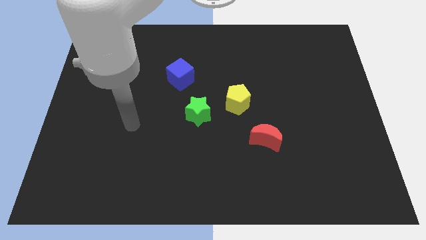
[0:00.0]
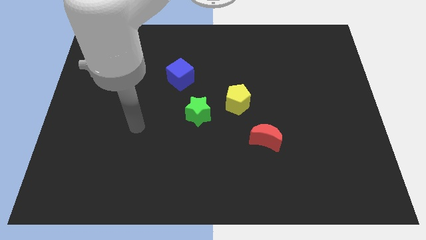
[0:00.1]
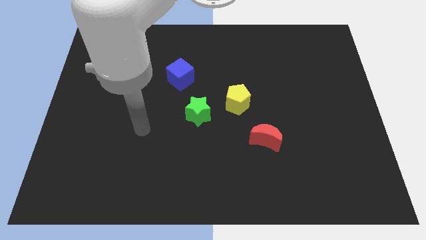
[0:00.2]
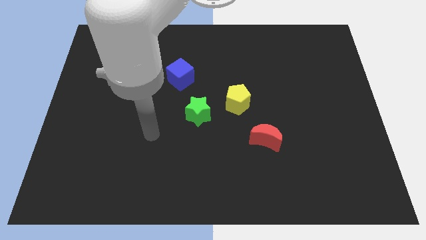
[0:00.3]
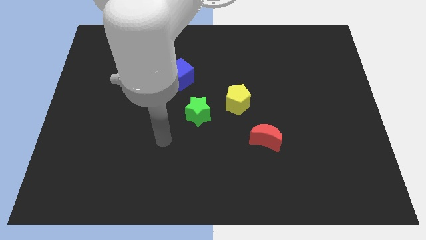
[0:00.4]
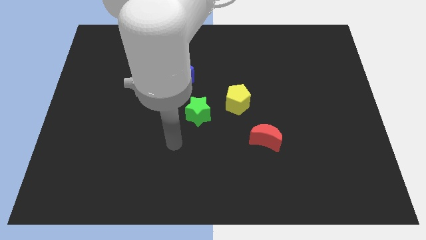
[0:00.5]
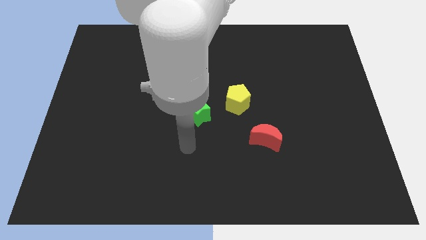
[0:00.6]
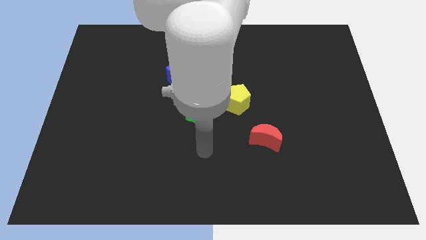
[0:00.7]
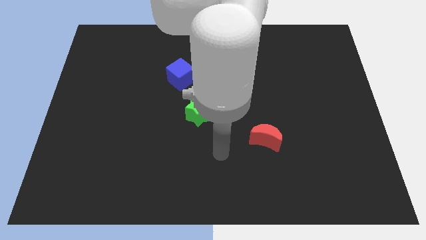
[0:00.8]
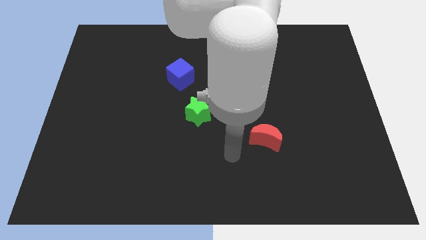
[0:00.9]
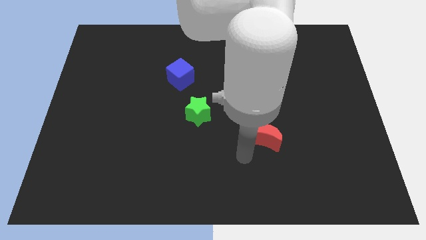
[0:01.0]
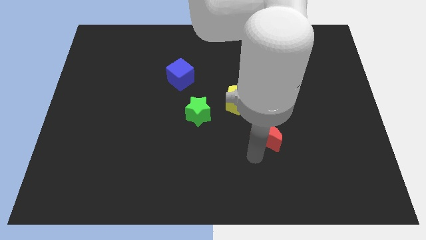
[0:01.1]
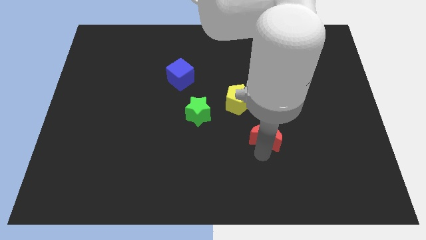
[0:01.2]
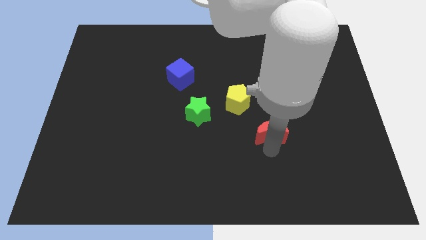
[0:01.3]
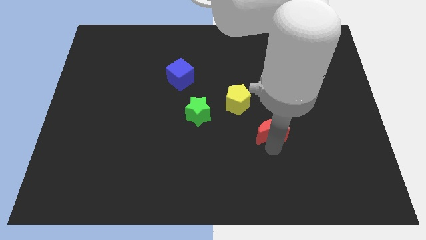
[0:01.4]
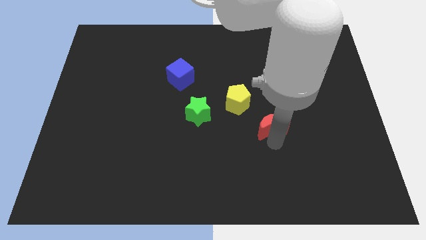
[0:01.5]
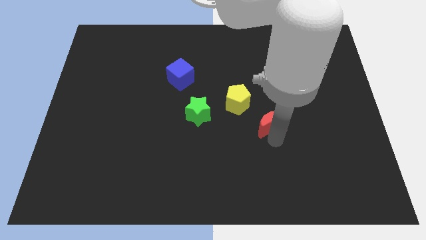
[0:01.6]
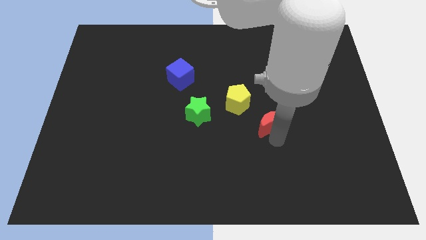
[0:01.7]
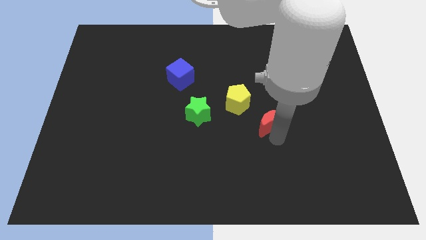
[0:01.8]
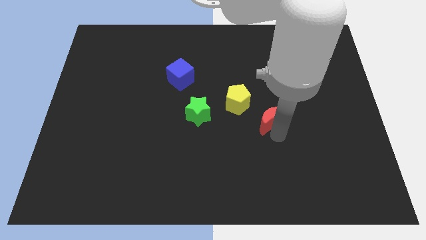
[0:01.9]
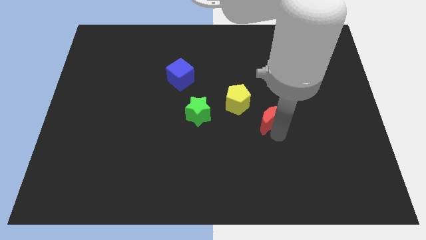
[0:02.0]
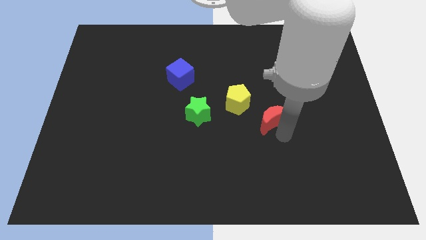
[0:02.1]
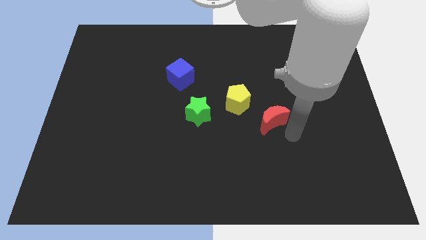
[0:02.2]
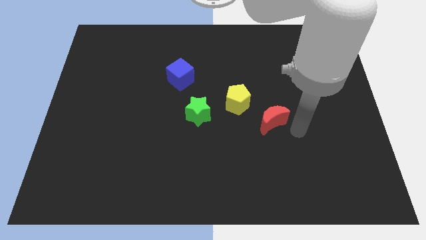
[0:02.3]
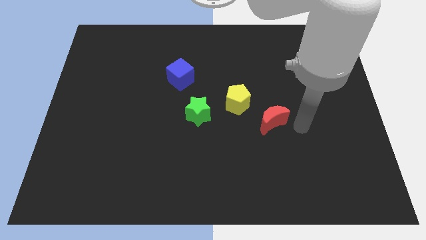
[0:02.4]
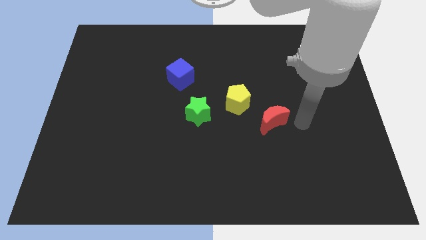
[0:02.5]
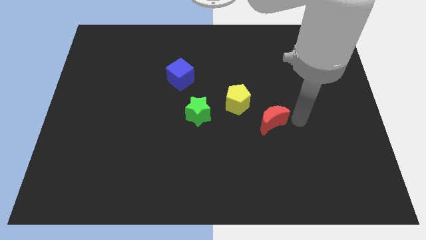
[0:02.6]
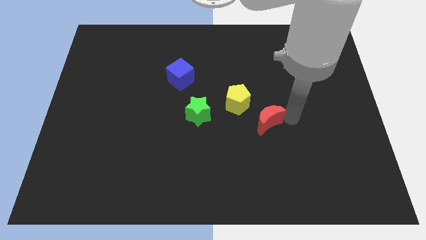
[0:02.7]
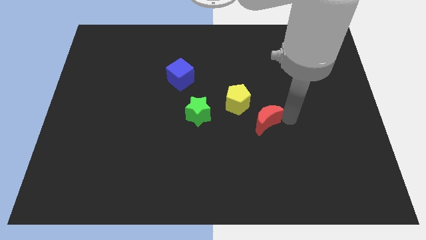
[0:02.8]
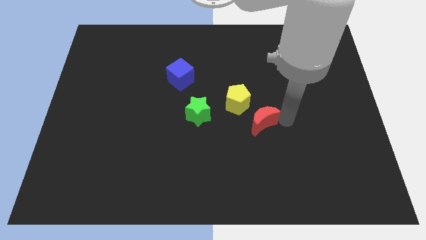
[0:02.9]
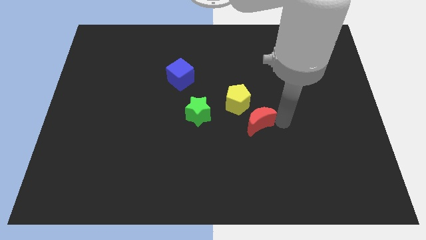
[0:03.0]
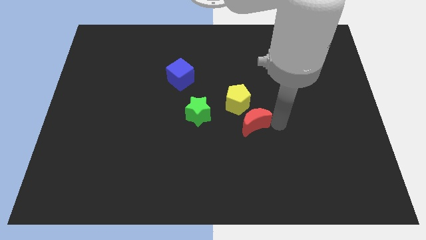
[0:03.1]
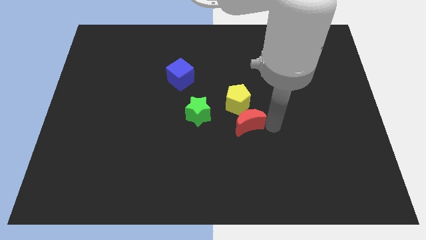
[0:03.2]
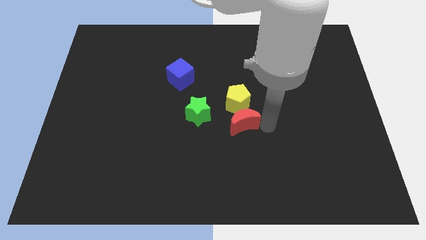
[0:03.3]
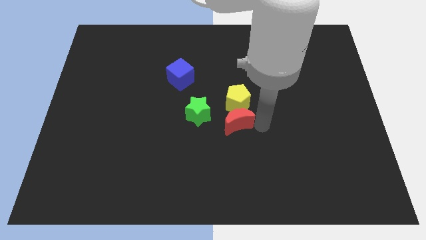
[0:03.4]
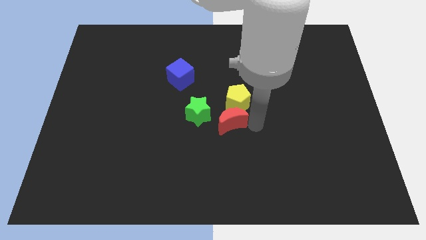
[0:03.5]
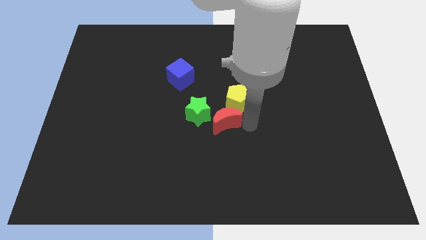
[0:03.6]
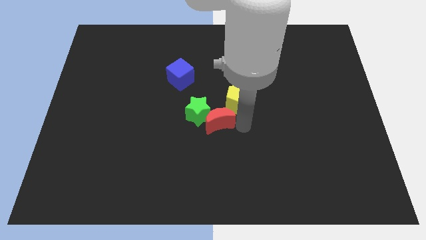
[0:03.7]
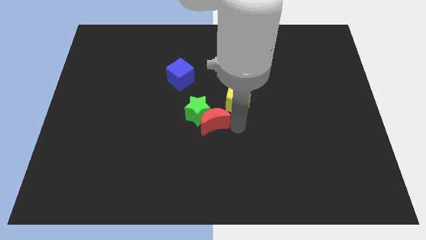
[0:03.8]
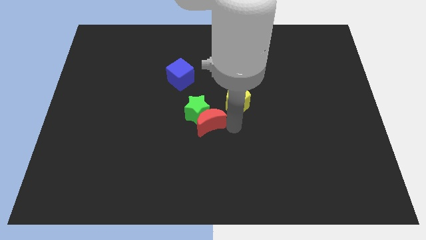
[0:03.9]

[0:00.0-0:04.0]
move the red block next to the green star

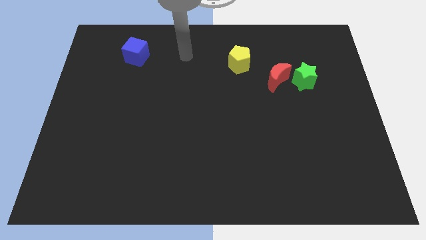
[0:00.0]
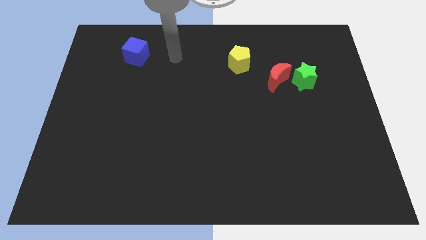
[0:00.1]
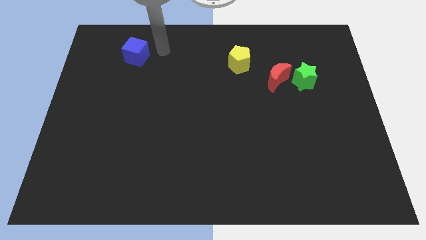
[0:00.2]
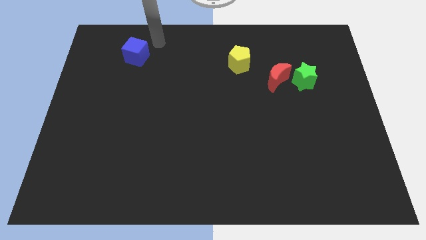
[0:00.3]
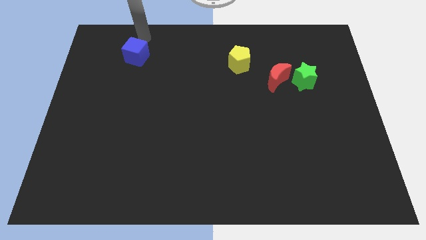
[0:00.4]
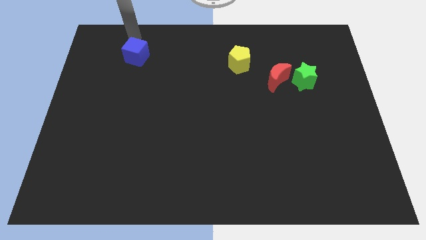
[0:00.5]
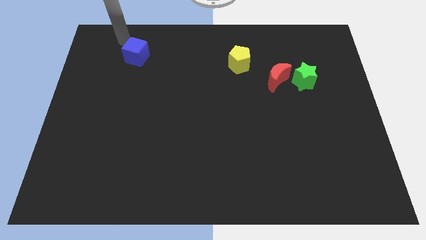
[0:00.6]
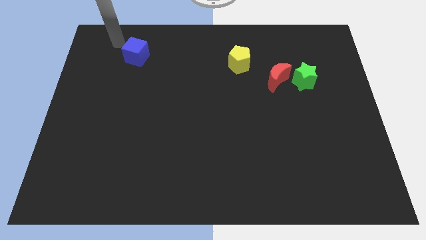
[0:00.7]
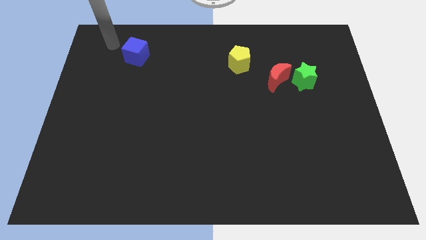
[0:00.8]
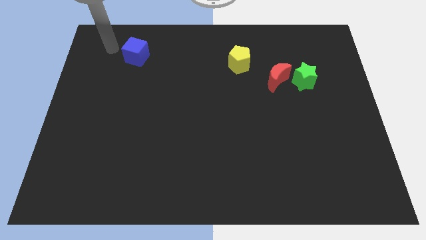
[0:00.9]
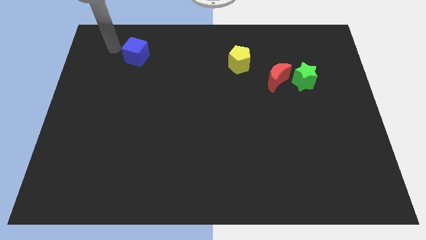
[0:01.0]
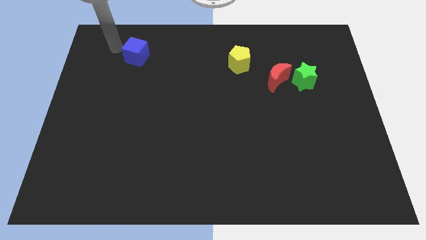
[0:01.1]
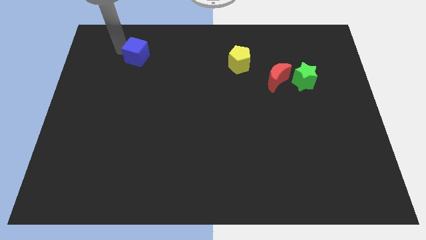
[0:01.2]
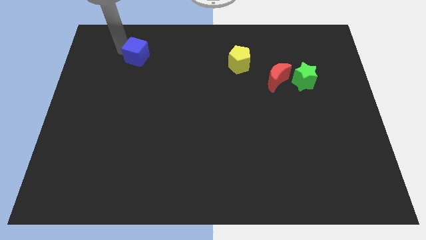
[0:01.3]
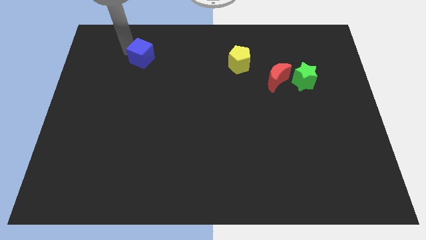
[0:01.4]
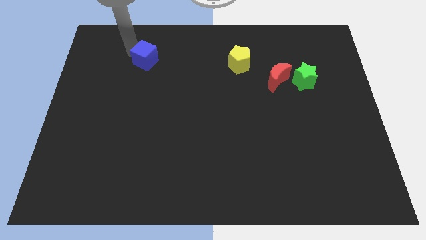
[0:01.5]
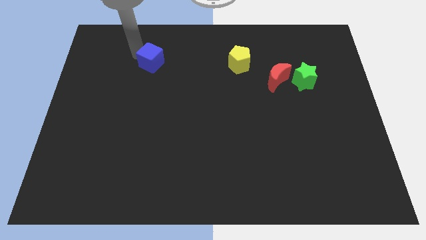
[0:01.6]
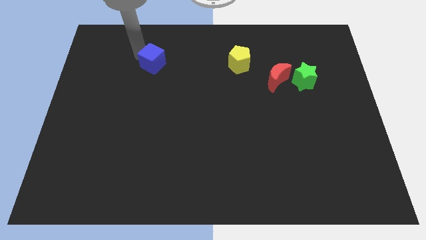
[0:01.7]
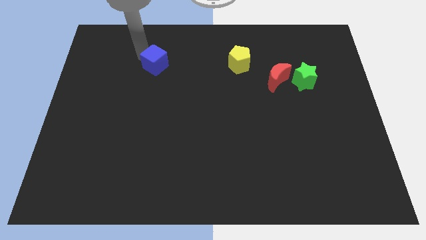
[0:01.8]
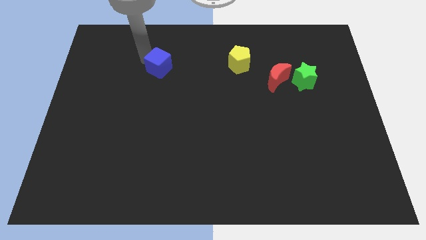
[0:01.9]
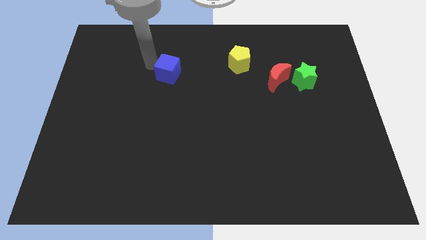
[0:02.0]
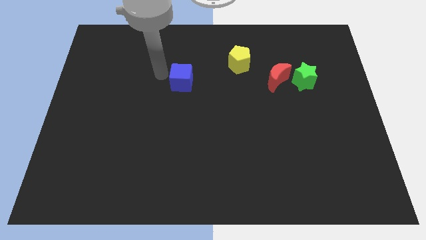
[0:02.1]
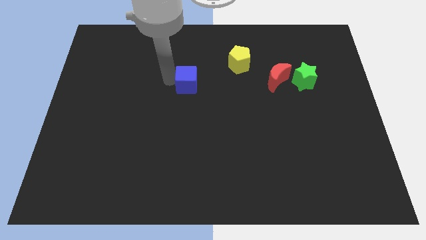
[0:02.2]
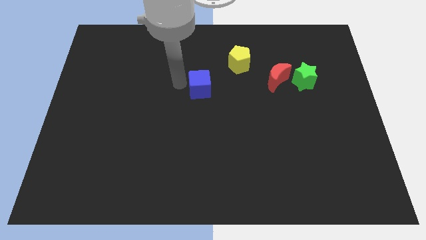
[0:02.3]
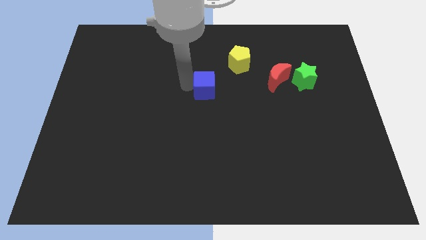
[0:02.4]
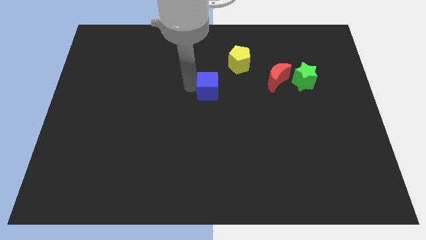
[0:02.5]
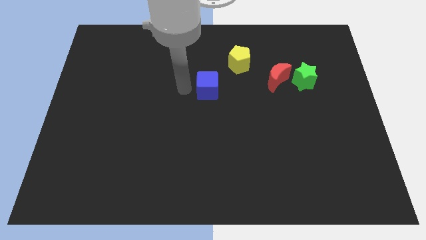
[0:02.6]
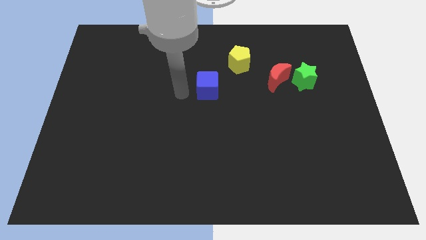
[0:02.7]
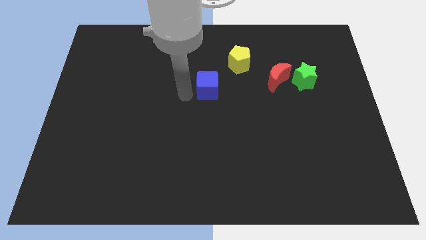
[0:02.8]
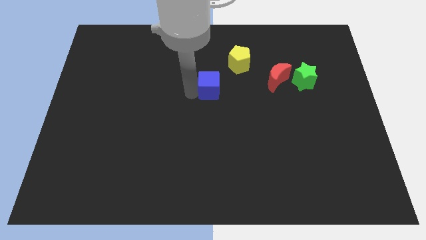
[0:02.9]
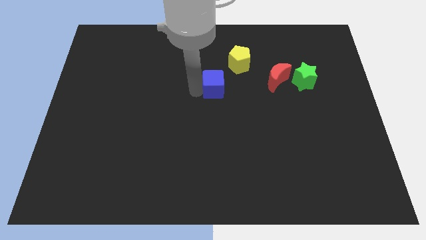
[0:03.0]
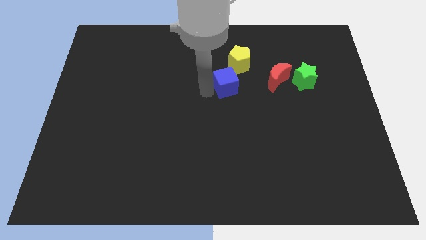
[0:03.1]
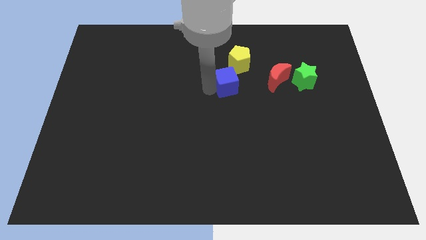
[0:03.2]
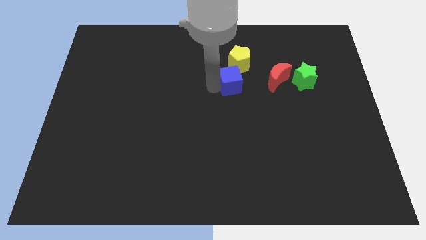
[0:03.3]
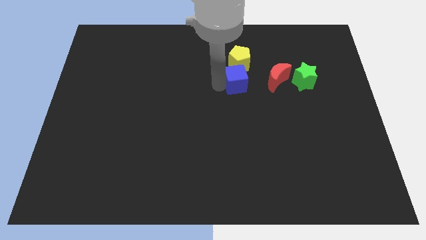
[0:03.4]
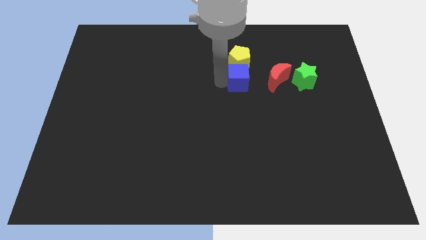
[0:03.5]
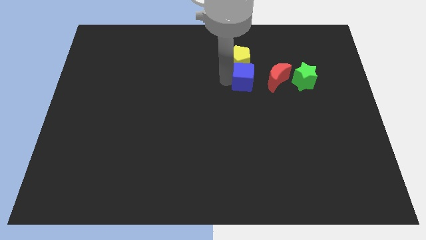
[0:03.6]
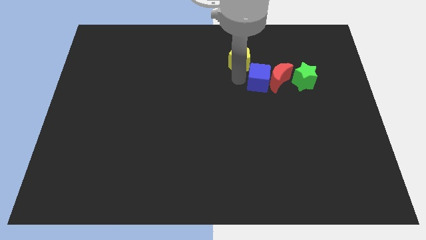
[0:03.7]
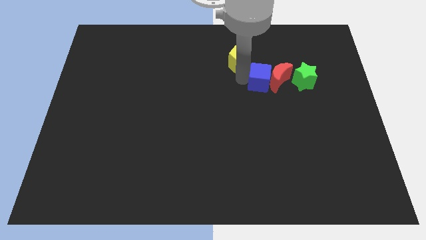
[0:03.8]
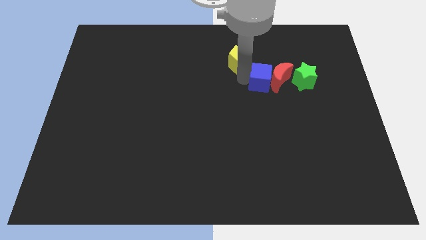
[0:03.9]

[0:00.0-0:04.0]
slide the cube to the red moon

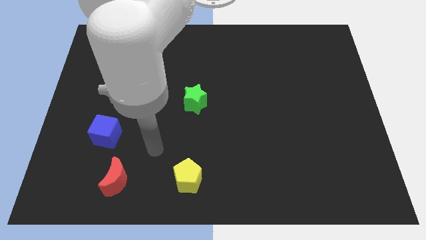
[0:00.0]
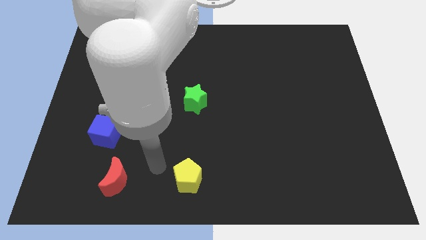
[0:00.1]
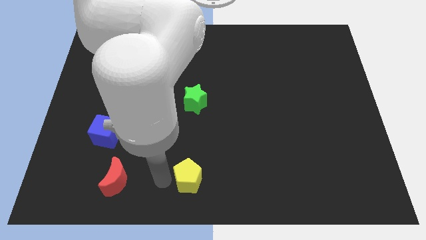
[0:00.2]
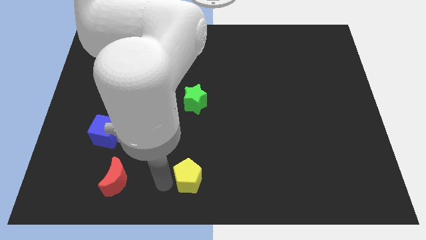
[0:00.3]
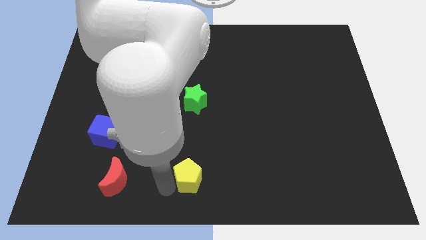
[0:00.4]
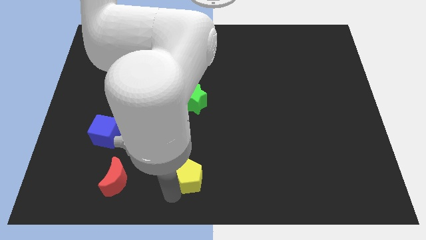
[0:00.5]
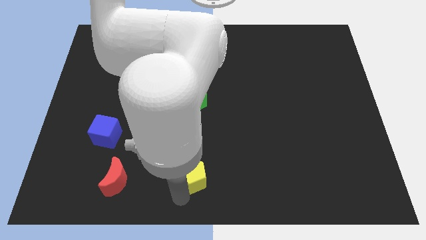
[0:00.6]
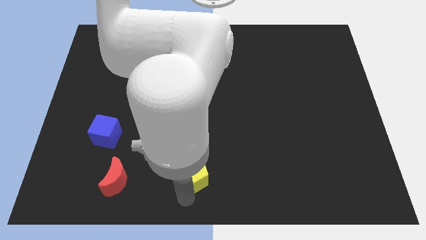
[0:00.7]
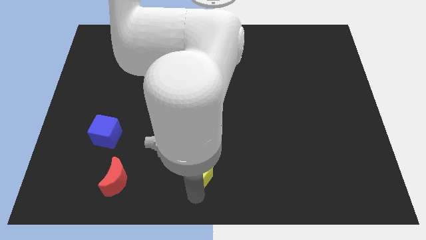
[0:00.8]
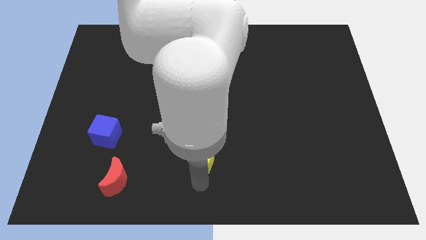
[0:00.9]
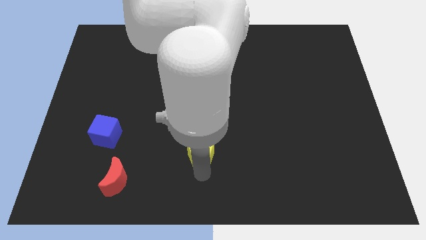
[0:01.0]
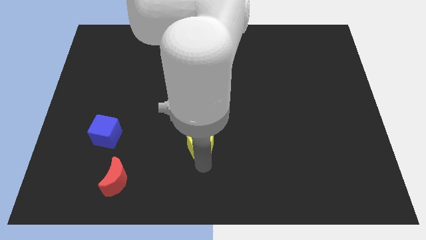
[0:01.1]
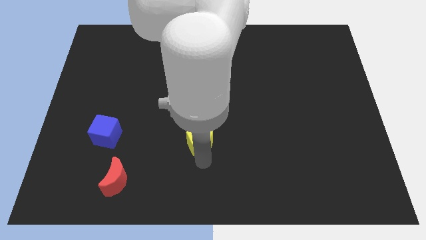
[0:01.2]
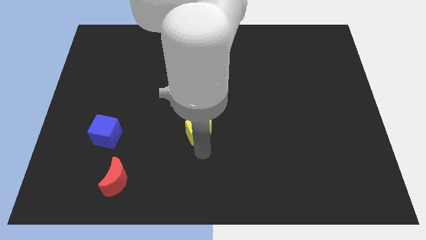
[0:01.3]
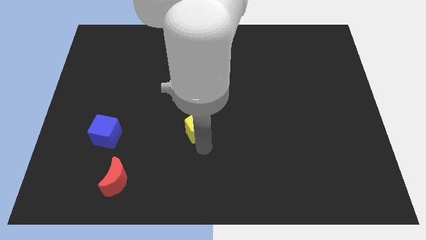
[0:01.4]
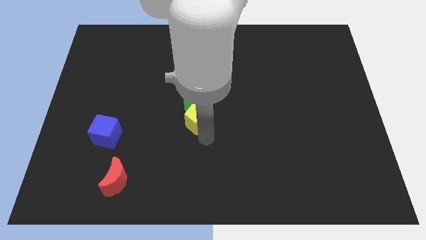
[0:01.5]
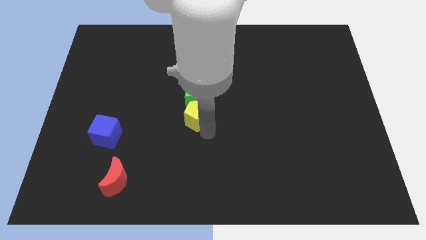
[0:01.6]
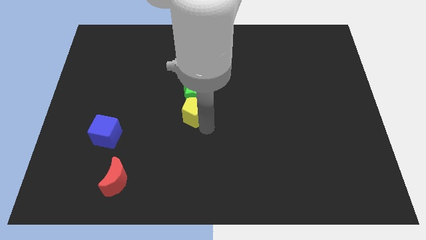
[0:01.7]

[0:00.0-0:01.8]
push the yellow pentagon close to the green star
